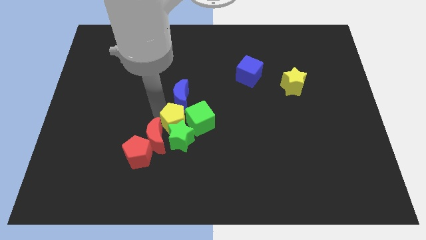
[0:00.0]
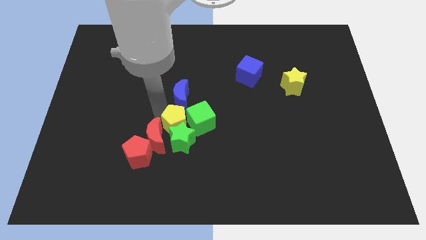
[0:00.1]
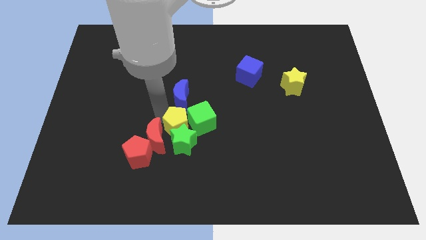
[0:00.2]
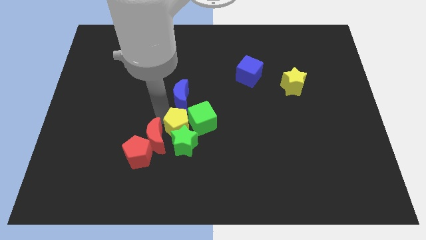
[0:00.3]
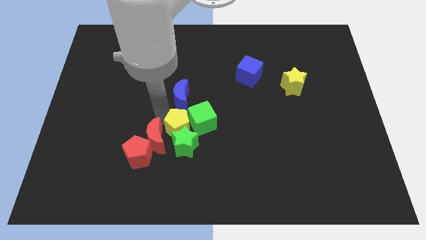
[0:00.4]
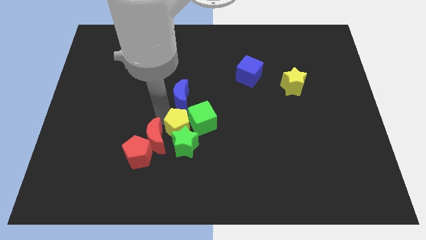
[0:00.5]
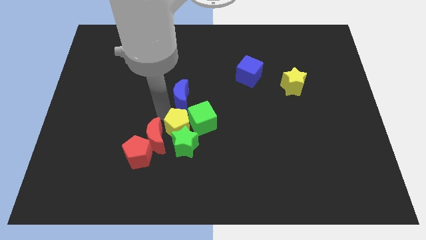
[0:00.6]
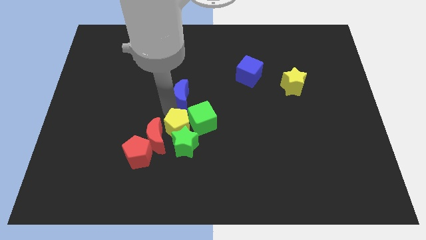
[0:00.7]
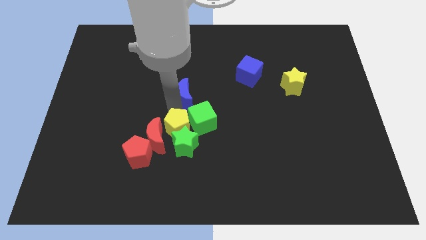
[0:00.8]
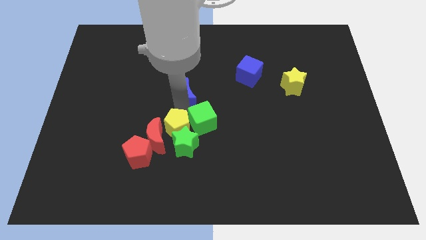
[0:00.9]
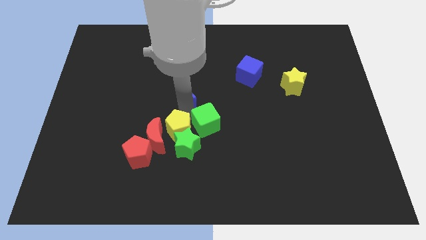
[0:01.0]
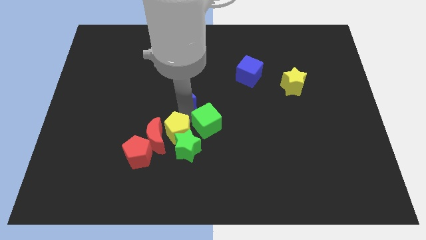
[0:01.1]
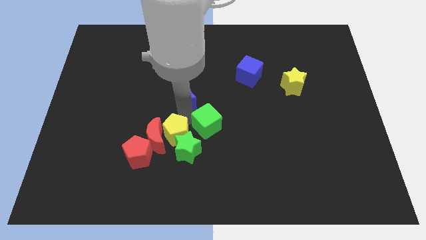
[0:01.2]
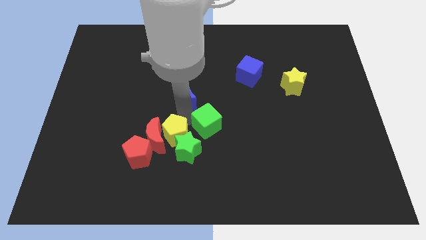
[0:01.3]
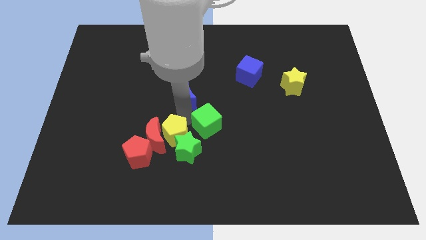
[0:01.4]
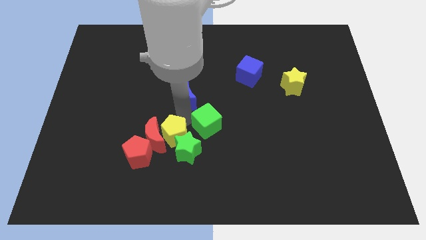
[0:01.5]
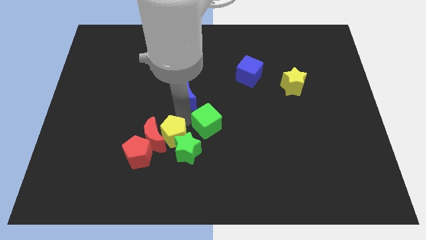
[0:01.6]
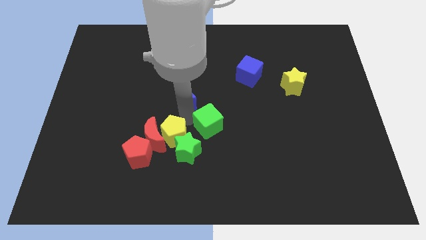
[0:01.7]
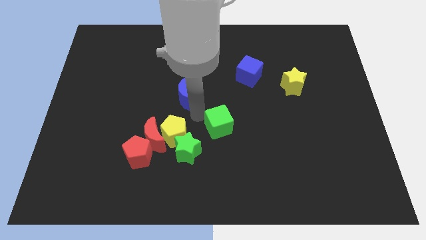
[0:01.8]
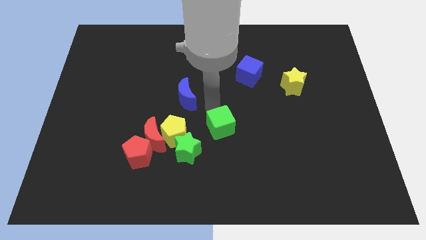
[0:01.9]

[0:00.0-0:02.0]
separate the yellow pentagon and the green cube

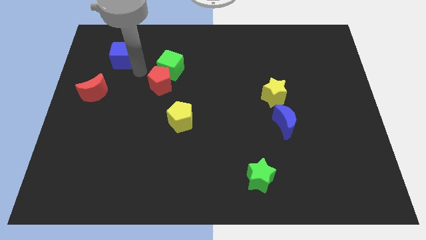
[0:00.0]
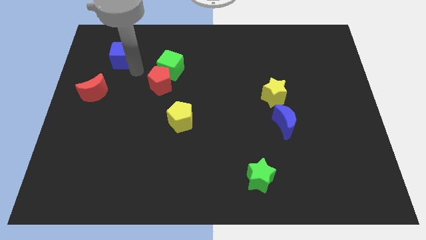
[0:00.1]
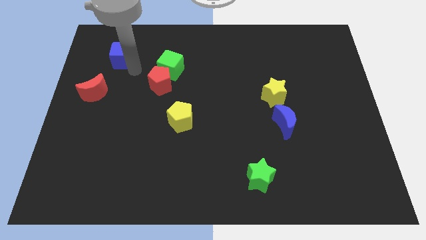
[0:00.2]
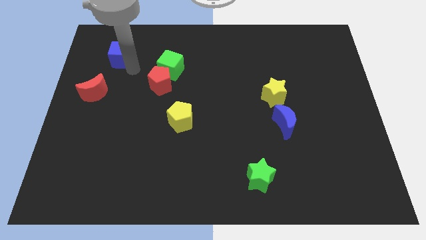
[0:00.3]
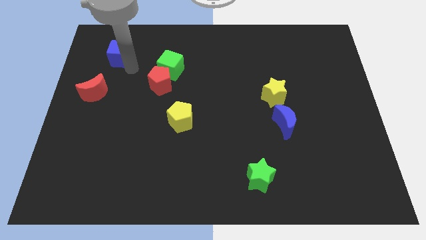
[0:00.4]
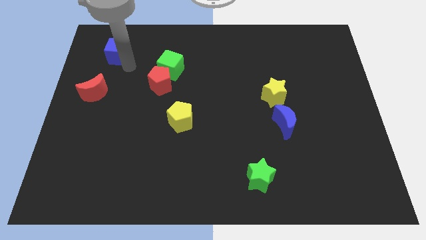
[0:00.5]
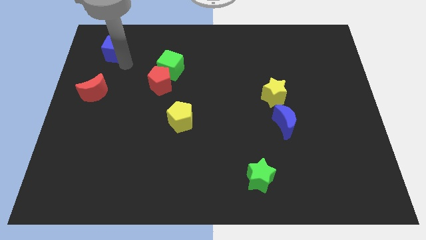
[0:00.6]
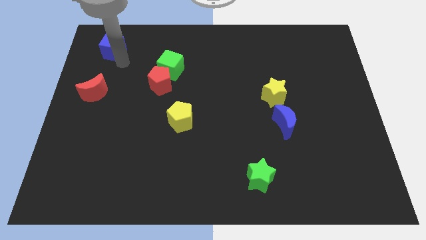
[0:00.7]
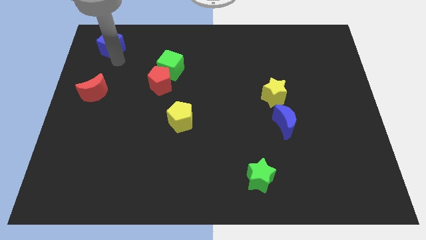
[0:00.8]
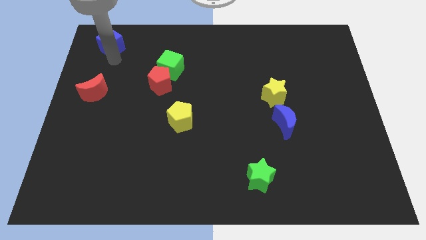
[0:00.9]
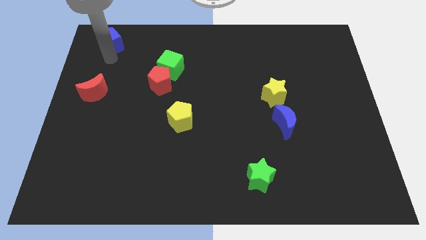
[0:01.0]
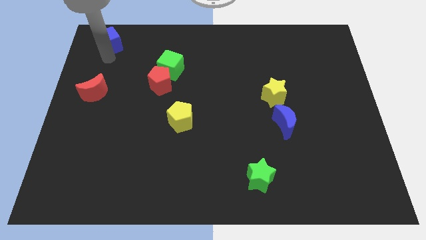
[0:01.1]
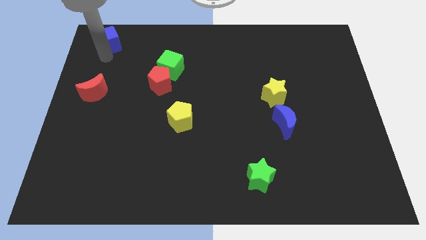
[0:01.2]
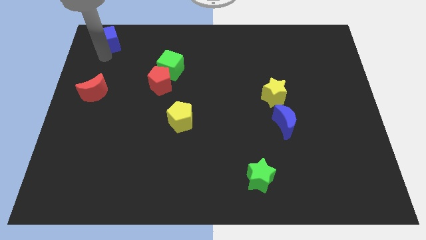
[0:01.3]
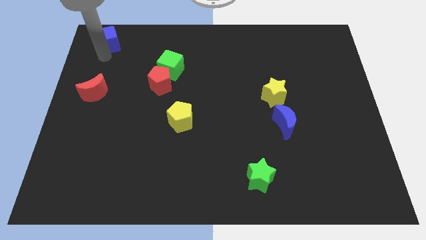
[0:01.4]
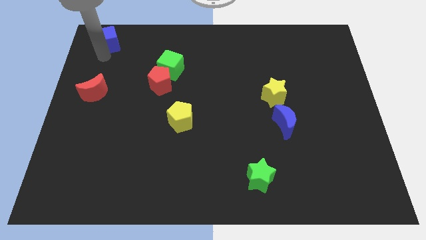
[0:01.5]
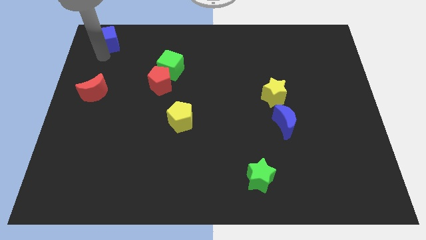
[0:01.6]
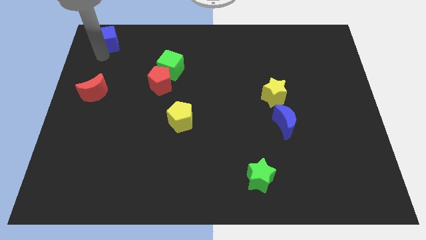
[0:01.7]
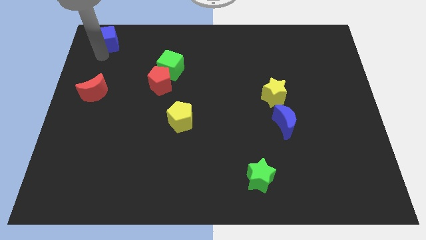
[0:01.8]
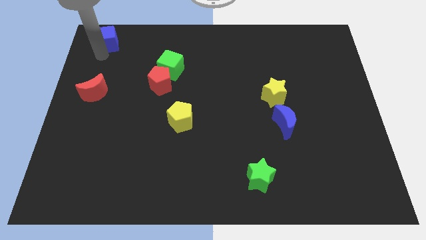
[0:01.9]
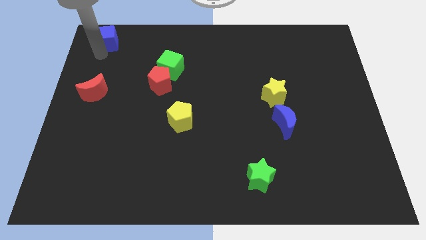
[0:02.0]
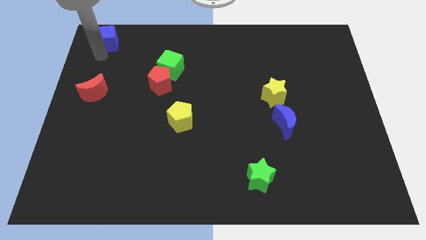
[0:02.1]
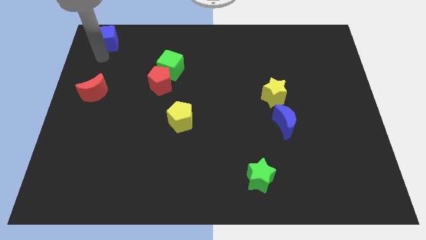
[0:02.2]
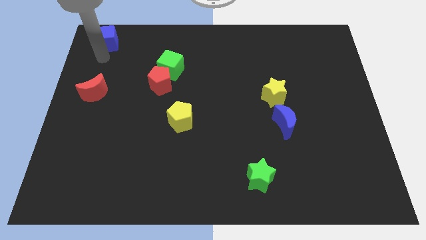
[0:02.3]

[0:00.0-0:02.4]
push the blue cube to the top left of the board

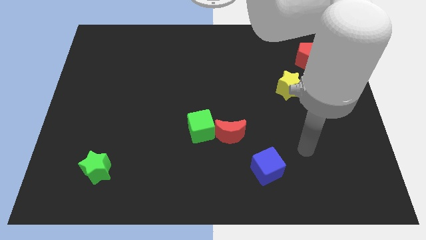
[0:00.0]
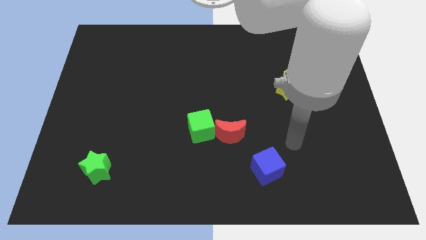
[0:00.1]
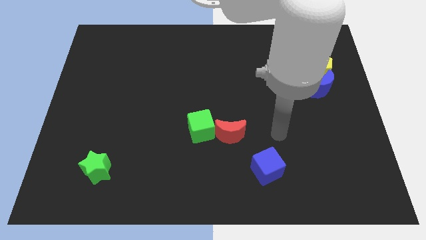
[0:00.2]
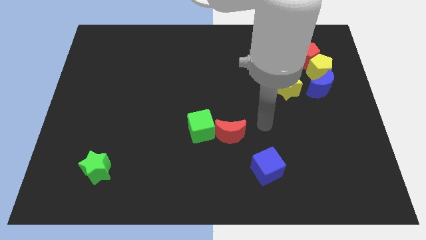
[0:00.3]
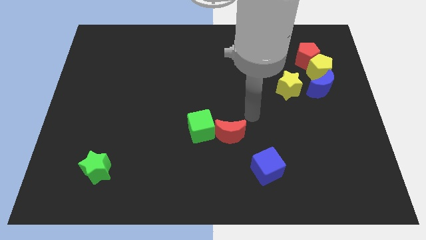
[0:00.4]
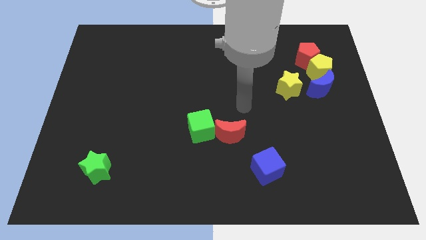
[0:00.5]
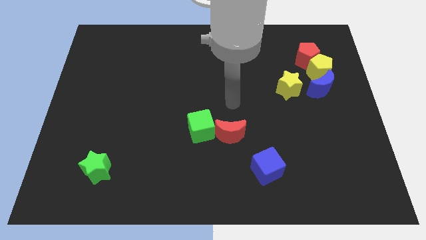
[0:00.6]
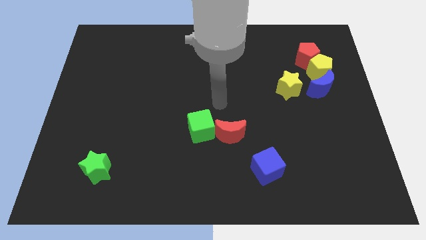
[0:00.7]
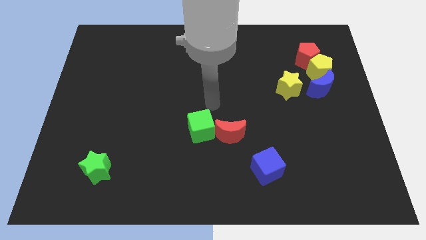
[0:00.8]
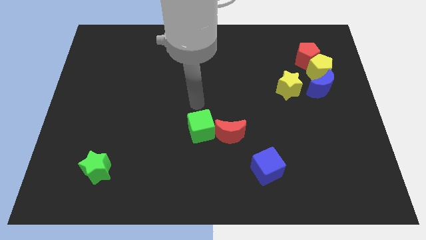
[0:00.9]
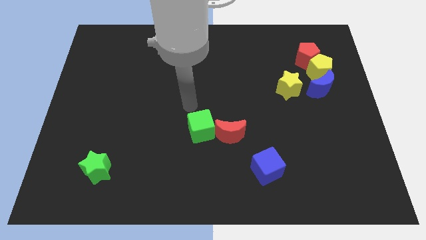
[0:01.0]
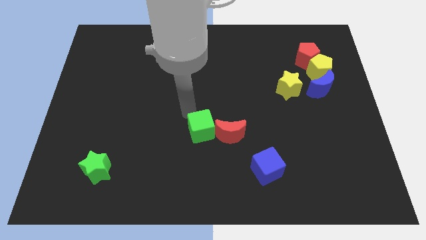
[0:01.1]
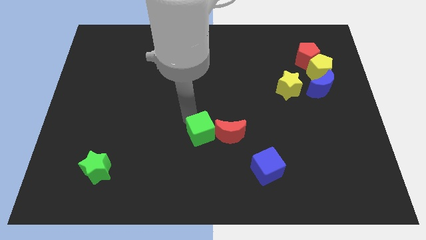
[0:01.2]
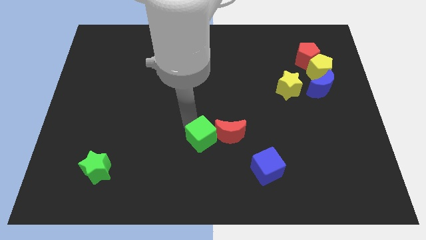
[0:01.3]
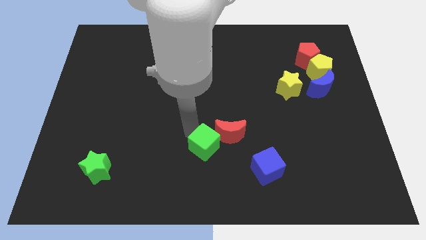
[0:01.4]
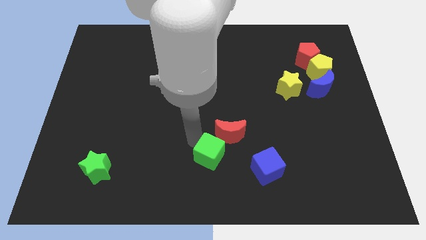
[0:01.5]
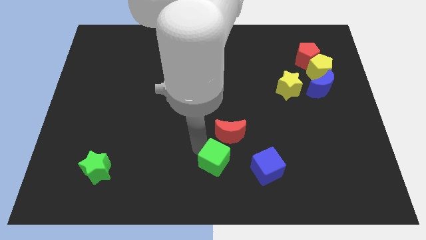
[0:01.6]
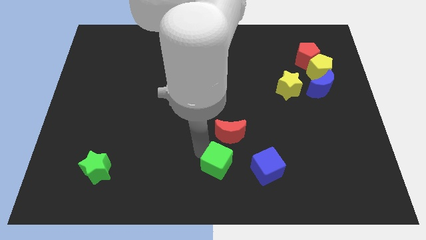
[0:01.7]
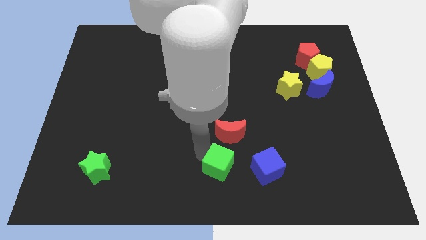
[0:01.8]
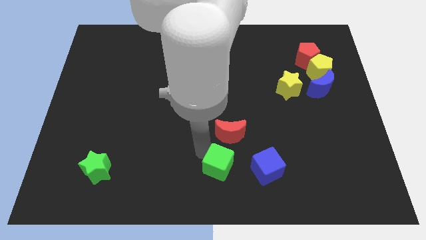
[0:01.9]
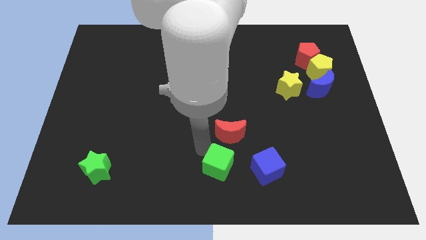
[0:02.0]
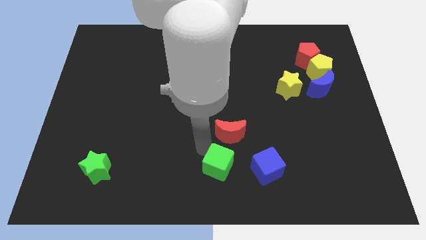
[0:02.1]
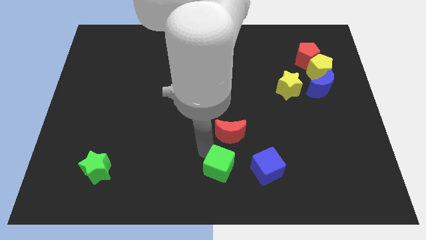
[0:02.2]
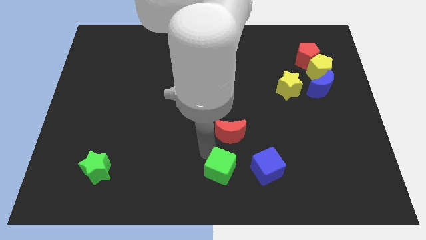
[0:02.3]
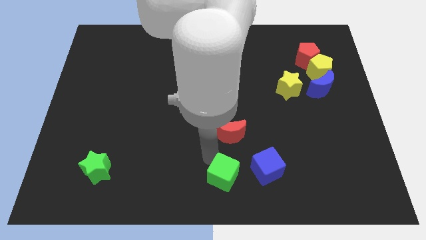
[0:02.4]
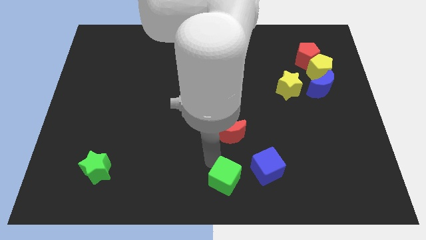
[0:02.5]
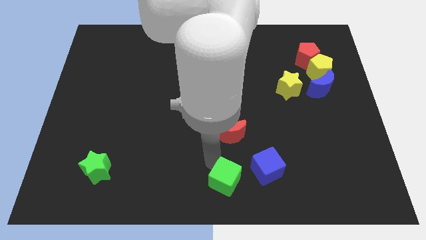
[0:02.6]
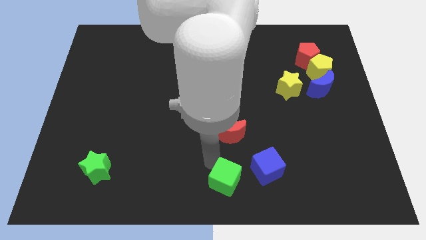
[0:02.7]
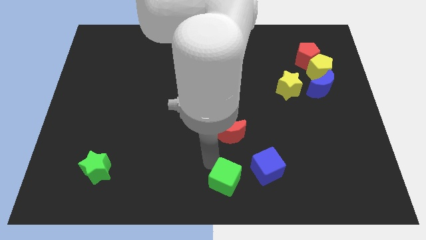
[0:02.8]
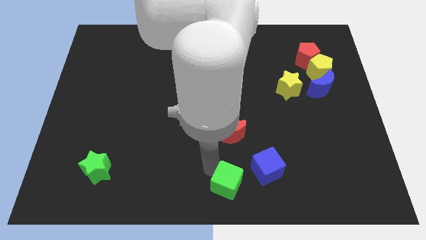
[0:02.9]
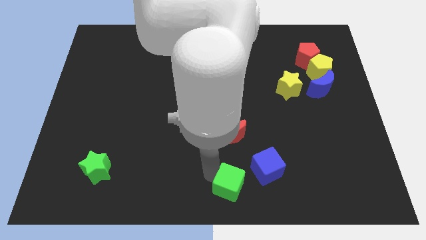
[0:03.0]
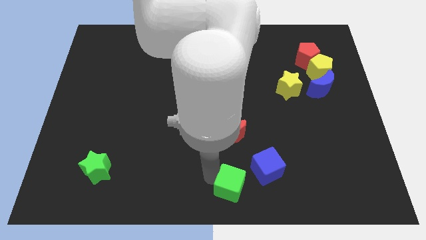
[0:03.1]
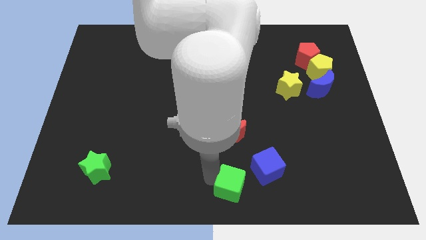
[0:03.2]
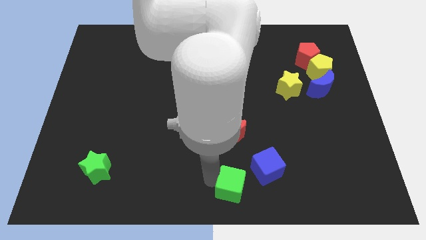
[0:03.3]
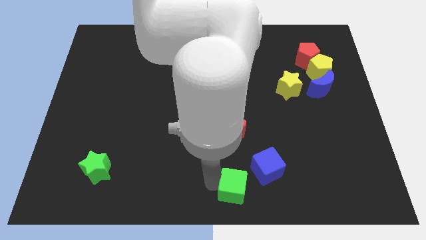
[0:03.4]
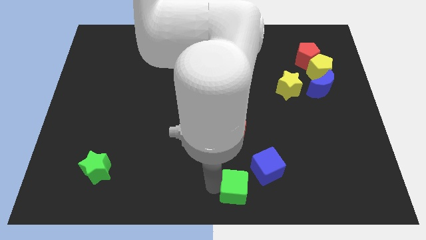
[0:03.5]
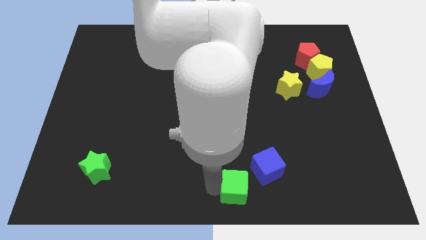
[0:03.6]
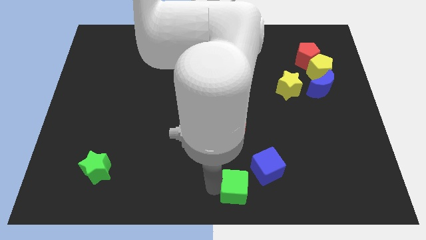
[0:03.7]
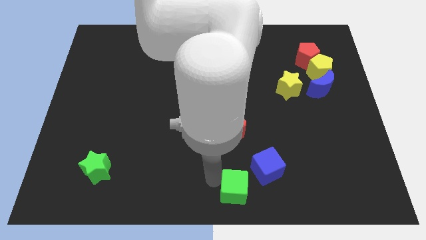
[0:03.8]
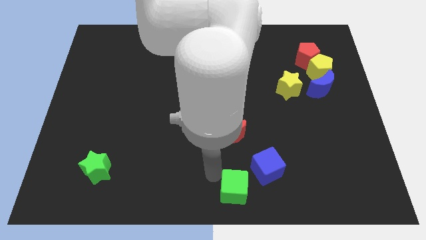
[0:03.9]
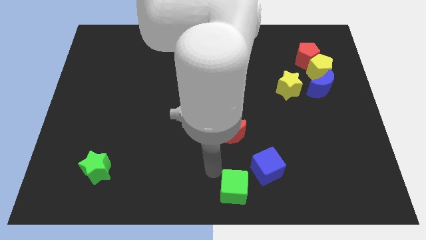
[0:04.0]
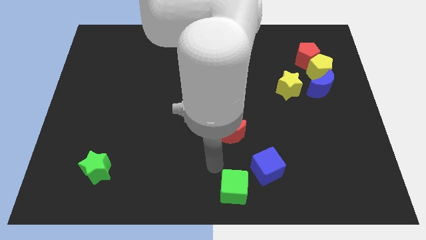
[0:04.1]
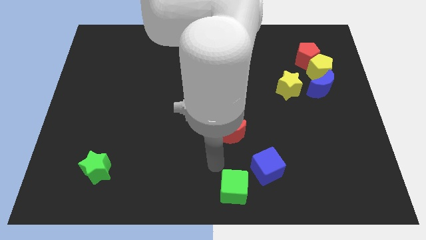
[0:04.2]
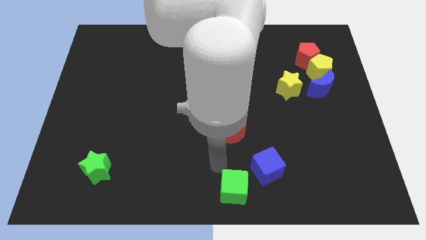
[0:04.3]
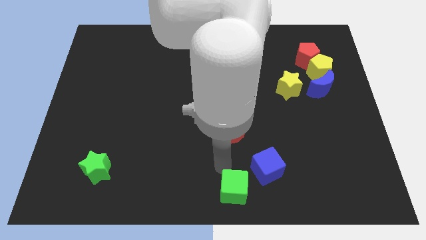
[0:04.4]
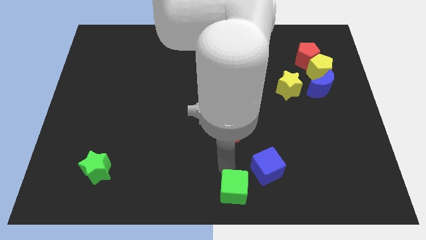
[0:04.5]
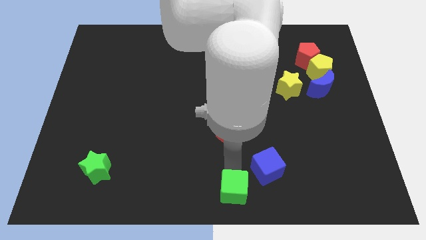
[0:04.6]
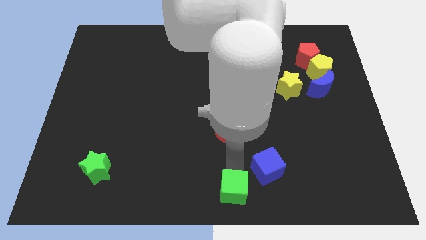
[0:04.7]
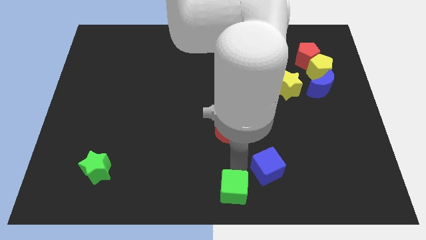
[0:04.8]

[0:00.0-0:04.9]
push green cube to the bottom of the board
